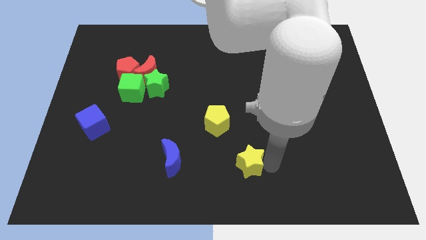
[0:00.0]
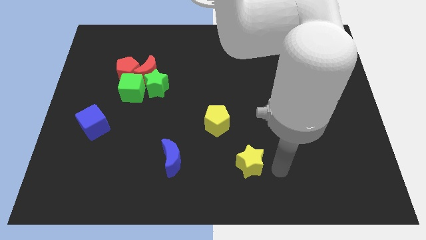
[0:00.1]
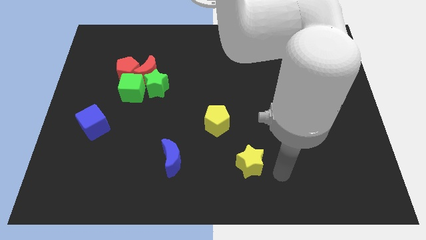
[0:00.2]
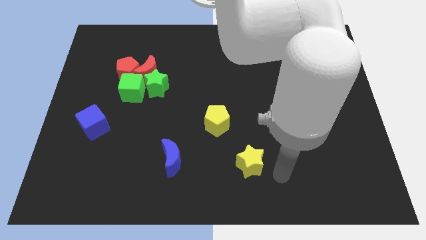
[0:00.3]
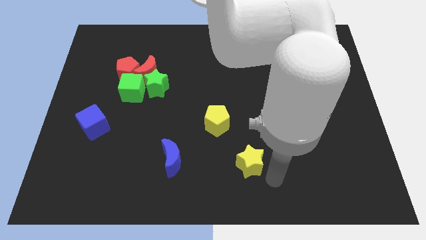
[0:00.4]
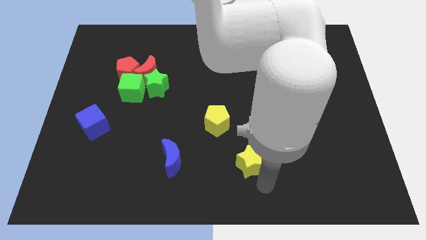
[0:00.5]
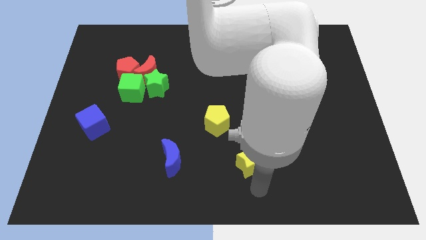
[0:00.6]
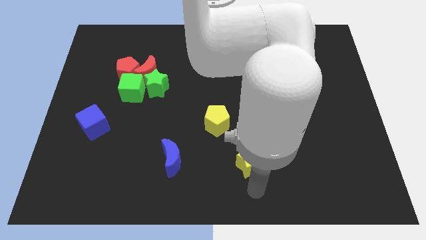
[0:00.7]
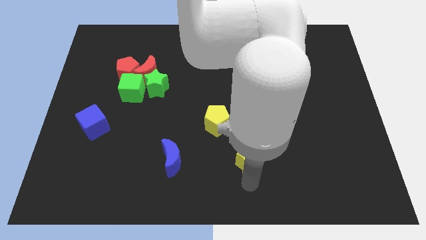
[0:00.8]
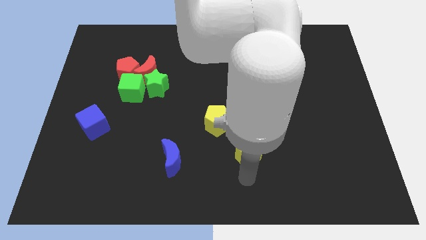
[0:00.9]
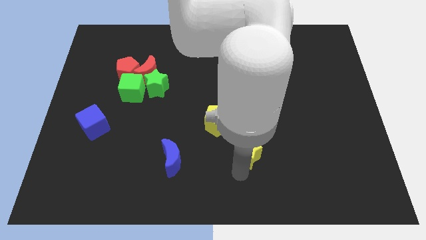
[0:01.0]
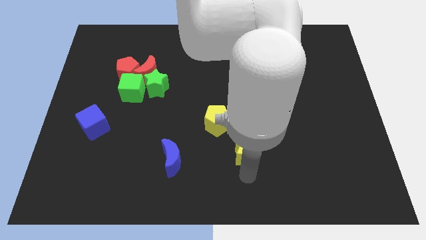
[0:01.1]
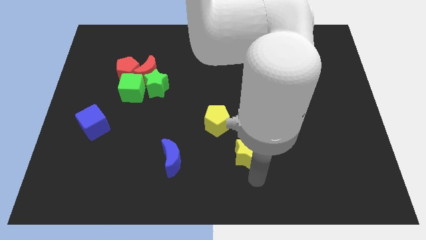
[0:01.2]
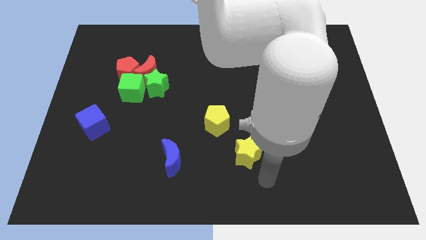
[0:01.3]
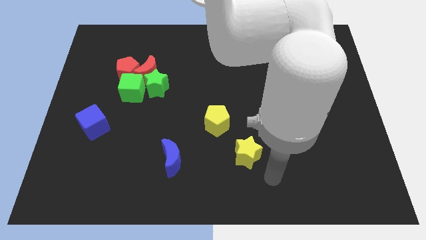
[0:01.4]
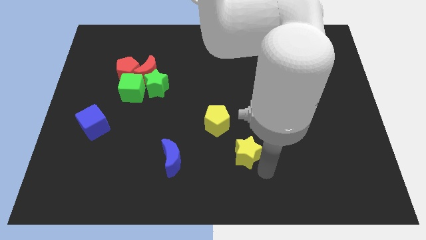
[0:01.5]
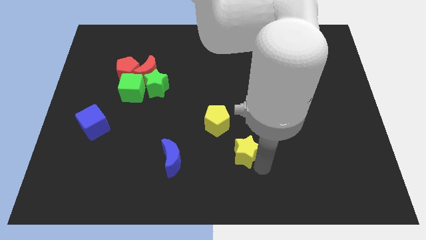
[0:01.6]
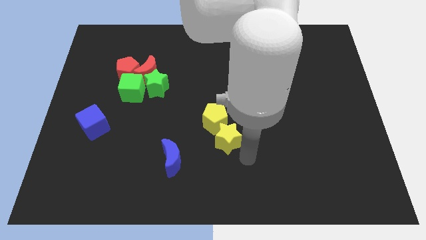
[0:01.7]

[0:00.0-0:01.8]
slide the yellow star into the yellow pentagon

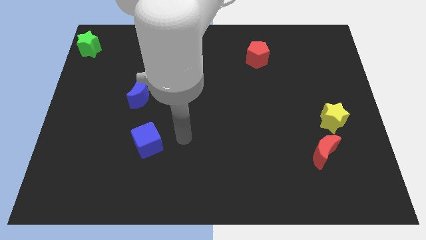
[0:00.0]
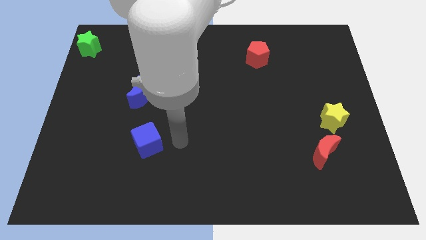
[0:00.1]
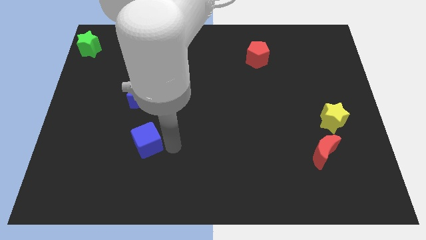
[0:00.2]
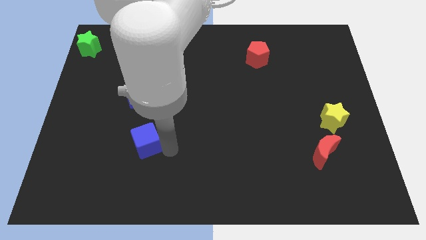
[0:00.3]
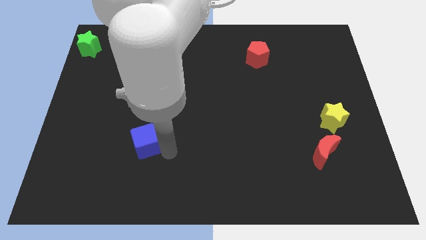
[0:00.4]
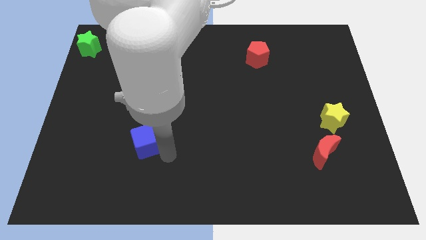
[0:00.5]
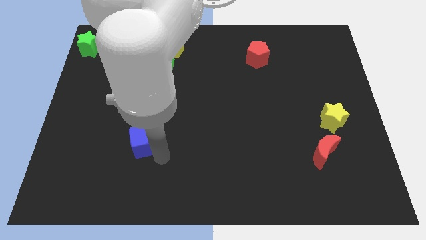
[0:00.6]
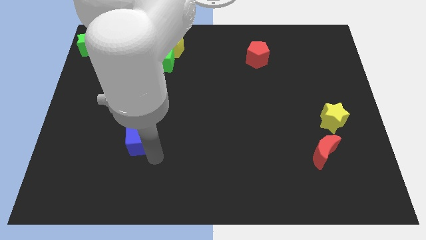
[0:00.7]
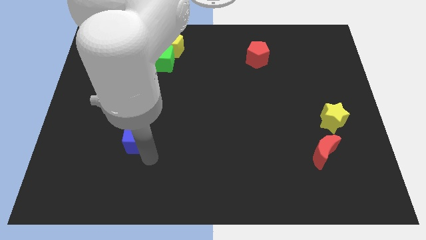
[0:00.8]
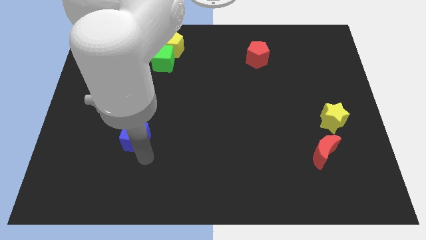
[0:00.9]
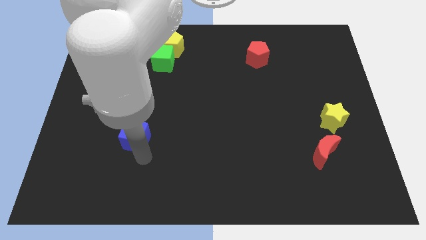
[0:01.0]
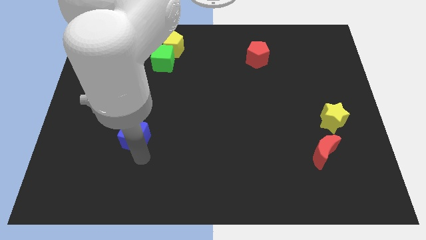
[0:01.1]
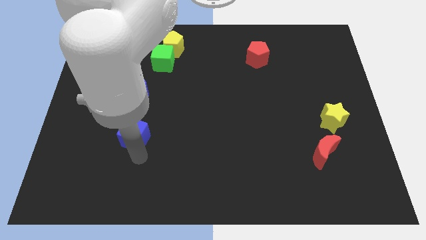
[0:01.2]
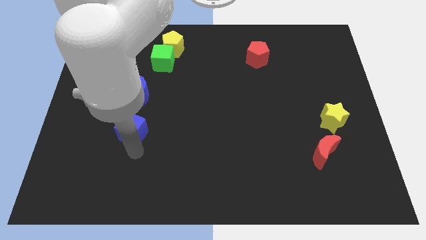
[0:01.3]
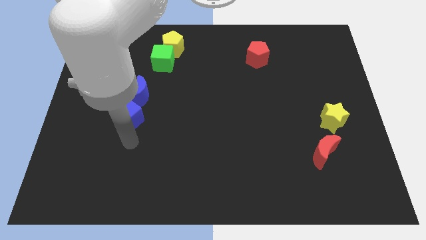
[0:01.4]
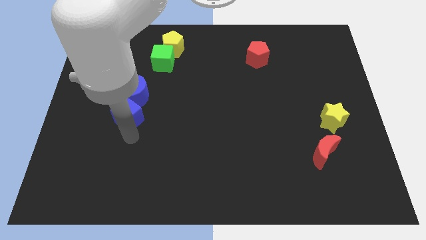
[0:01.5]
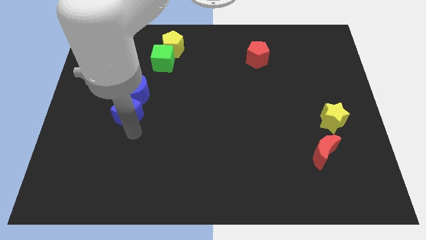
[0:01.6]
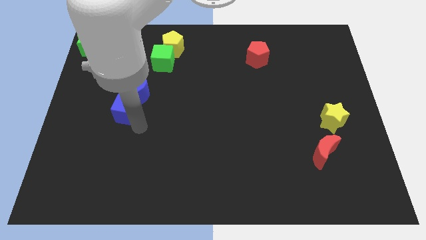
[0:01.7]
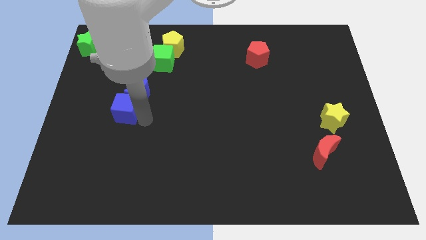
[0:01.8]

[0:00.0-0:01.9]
place blue cube into the blue moon

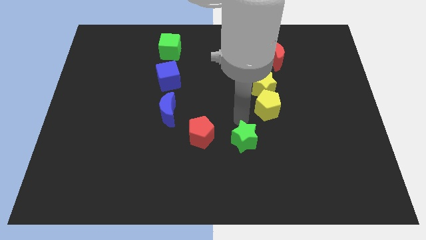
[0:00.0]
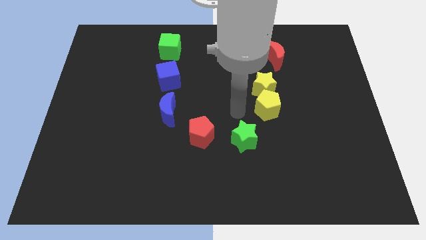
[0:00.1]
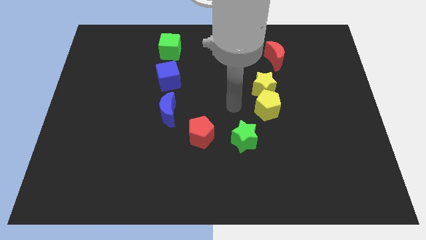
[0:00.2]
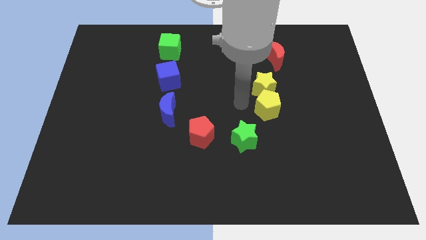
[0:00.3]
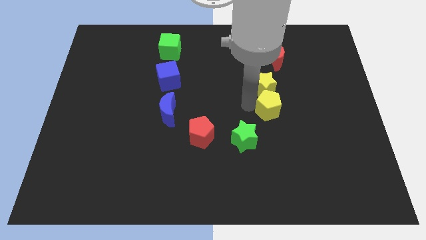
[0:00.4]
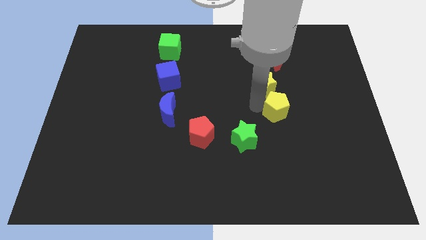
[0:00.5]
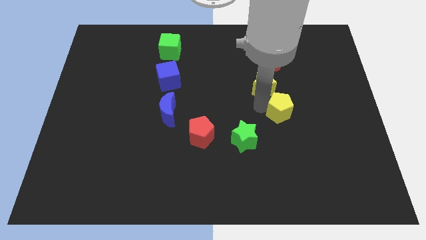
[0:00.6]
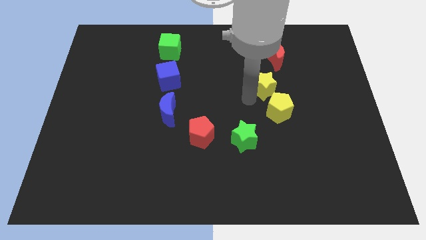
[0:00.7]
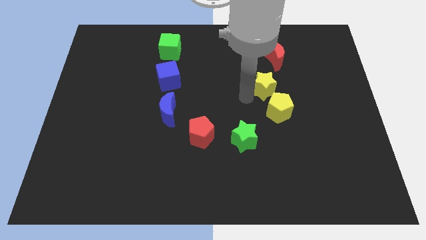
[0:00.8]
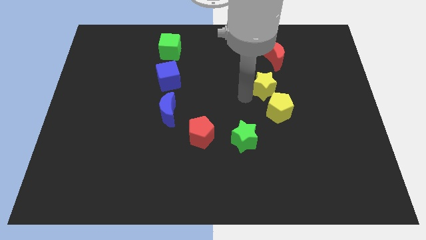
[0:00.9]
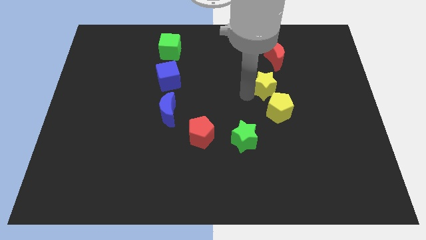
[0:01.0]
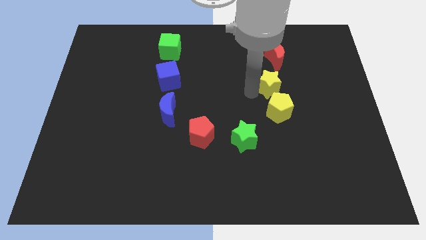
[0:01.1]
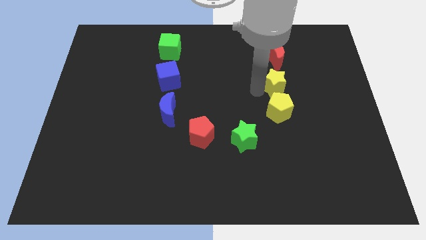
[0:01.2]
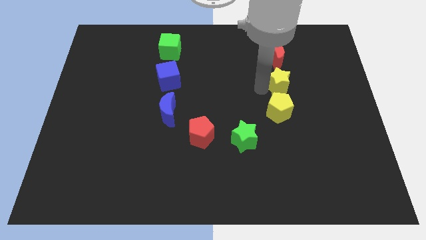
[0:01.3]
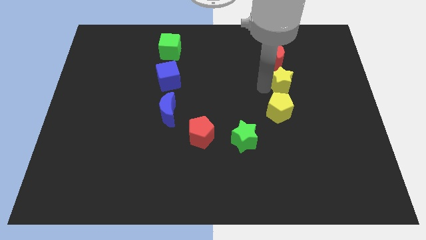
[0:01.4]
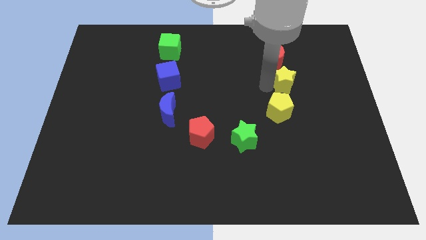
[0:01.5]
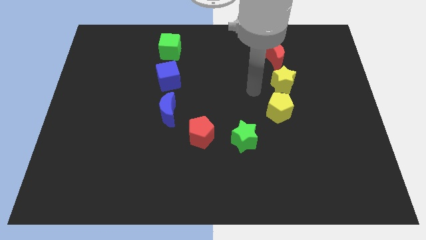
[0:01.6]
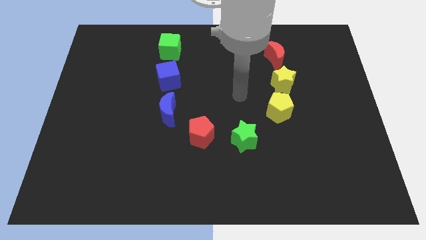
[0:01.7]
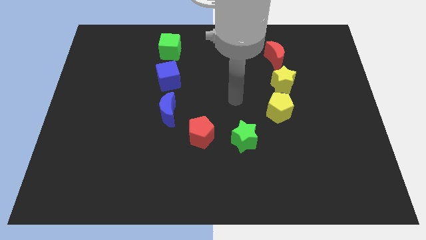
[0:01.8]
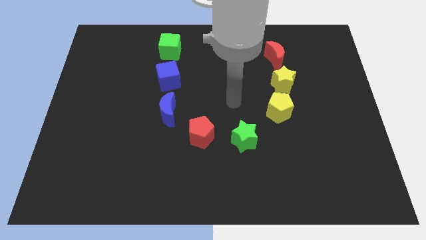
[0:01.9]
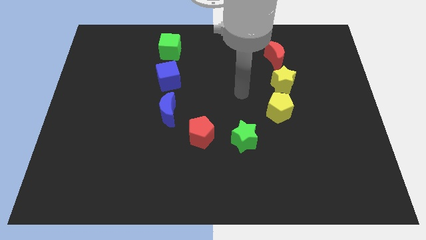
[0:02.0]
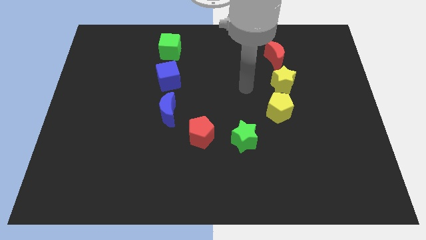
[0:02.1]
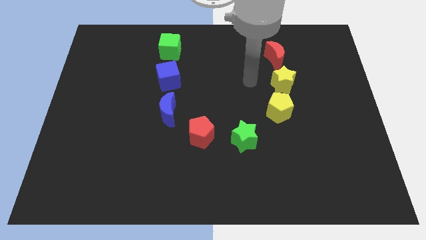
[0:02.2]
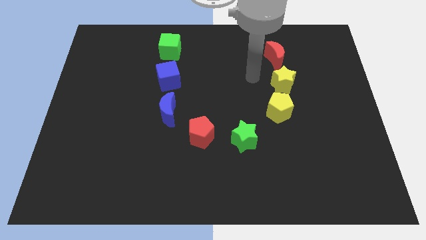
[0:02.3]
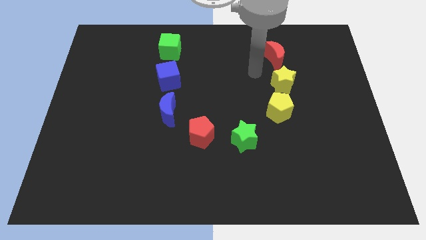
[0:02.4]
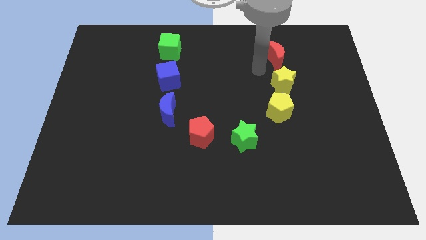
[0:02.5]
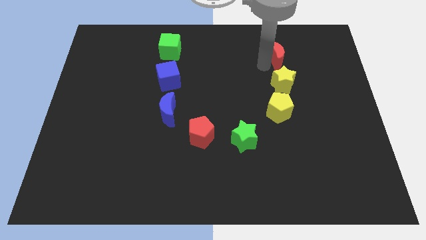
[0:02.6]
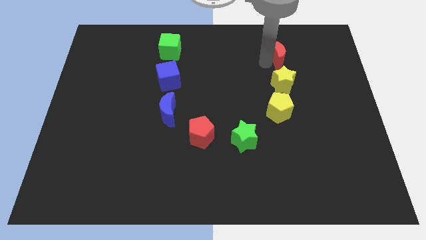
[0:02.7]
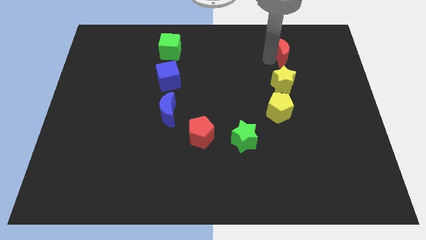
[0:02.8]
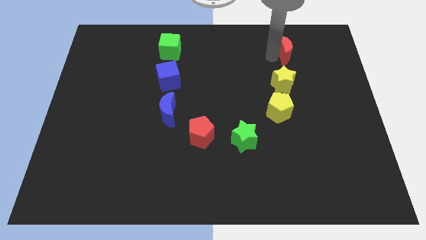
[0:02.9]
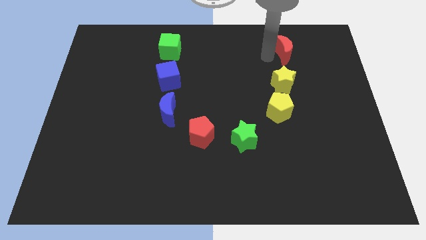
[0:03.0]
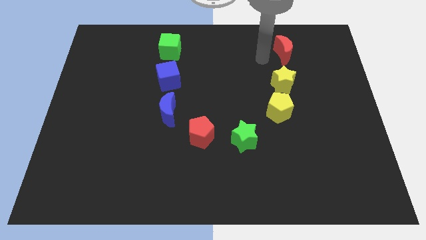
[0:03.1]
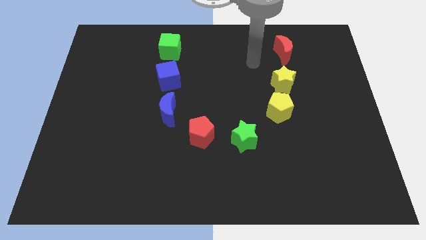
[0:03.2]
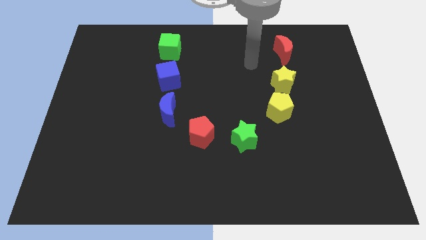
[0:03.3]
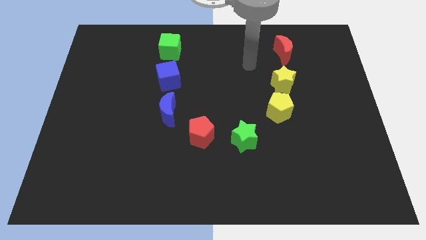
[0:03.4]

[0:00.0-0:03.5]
move the yellow pentagon and yellow star vertically bottom at the red crescent

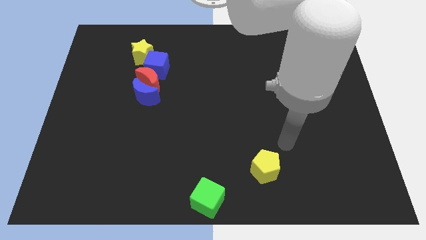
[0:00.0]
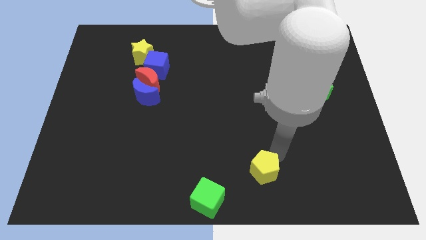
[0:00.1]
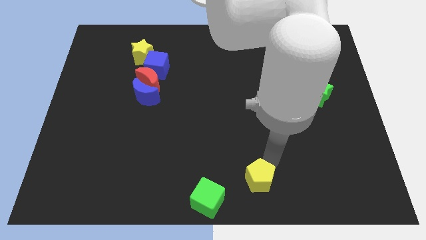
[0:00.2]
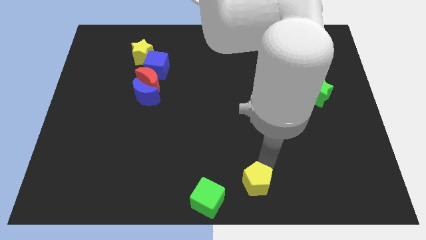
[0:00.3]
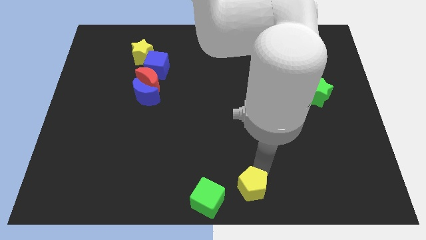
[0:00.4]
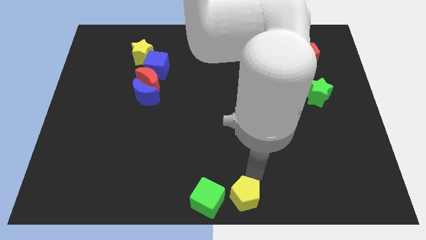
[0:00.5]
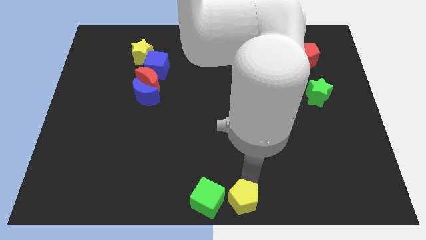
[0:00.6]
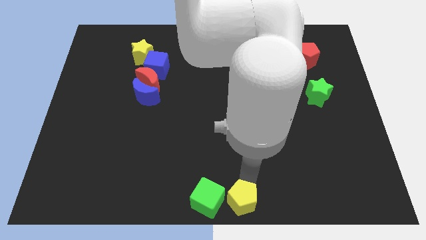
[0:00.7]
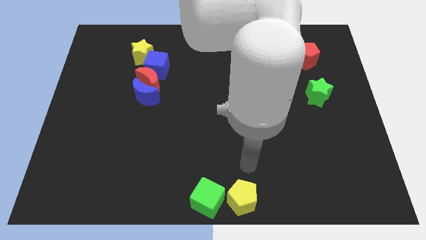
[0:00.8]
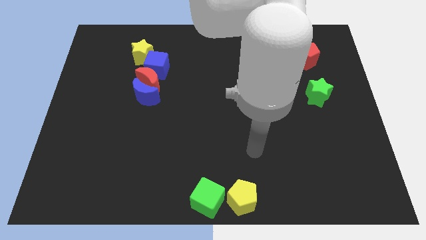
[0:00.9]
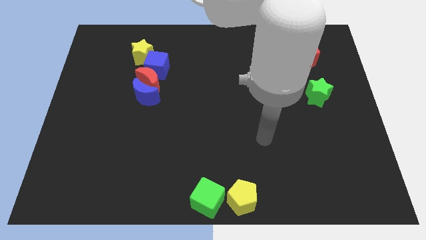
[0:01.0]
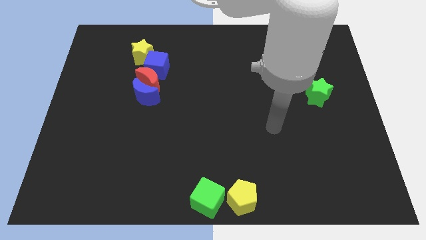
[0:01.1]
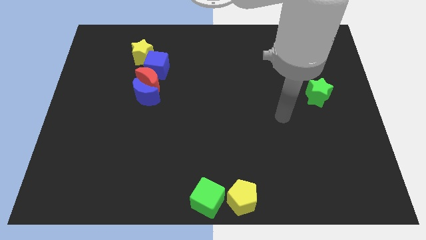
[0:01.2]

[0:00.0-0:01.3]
place yellow pentagon close to green block

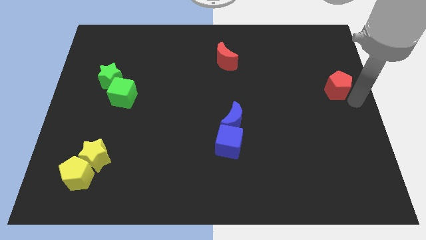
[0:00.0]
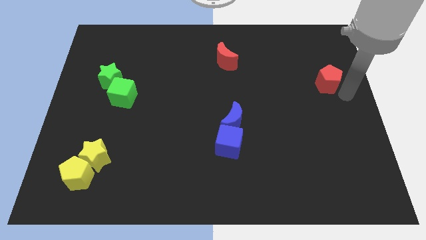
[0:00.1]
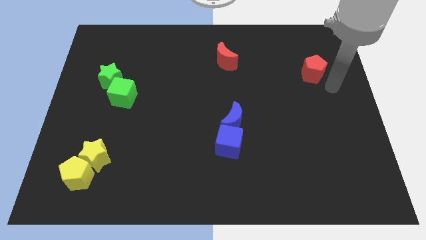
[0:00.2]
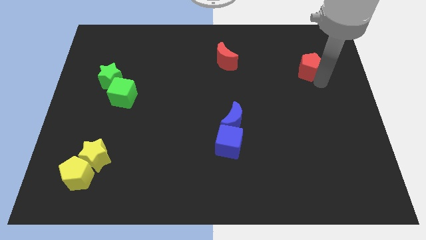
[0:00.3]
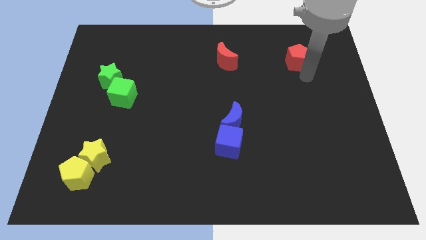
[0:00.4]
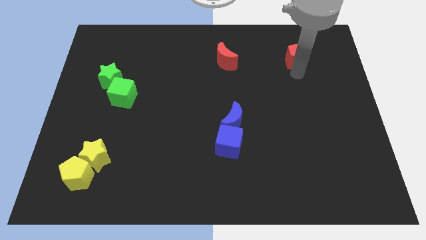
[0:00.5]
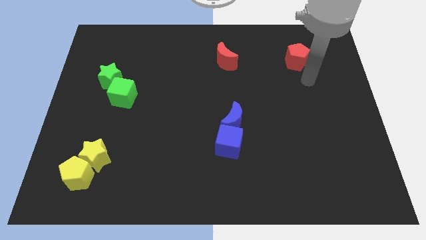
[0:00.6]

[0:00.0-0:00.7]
move the red pentagon to the right of the red crescent
